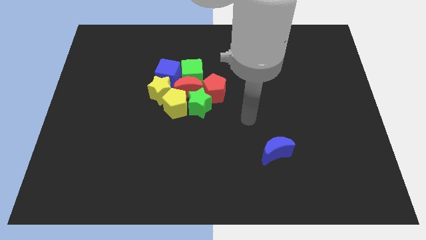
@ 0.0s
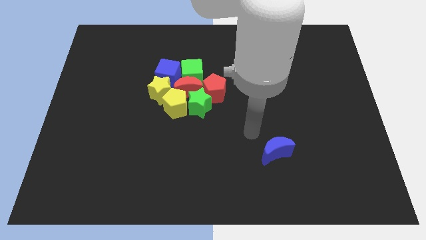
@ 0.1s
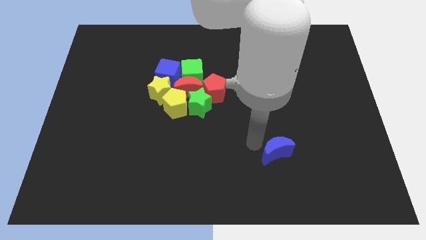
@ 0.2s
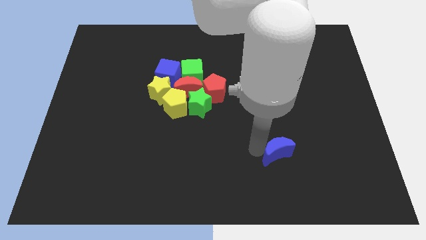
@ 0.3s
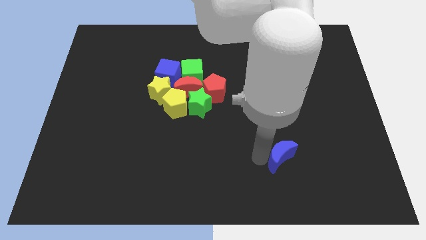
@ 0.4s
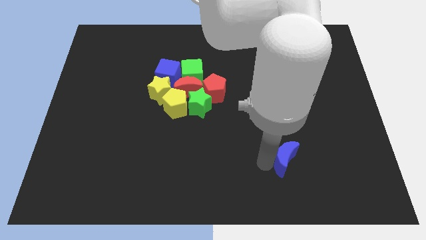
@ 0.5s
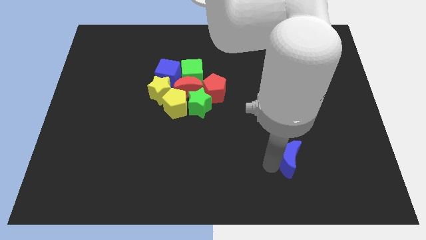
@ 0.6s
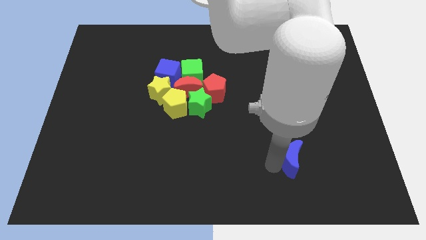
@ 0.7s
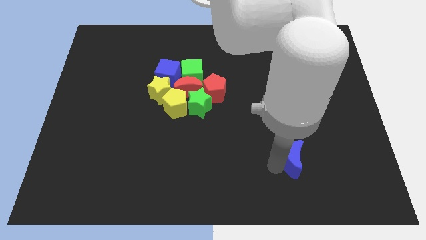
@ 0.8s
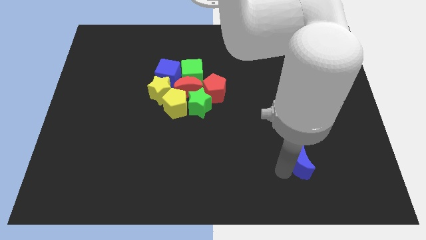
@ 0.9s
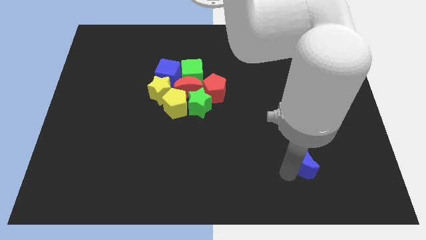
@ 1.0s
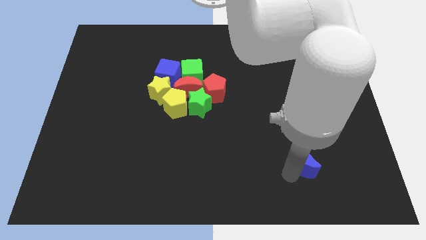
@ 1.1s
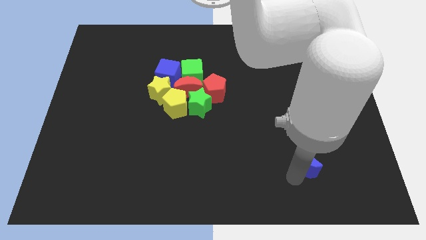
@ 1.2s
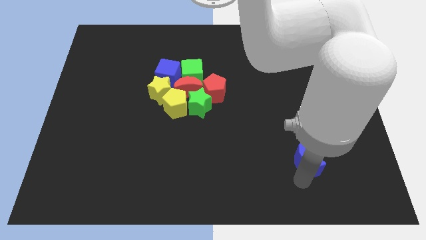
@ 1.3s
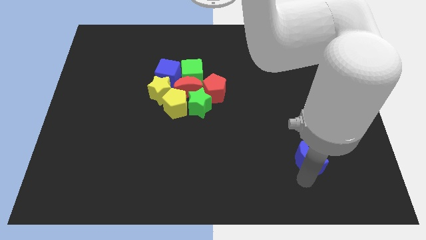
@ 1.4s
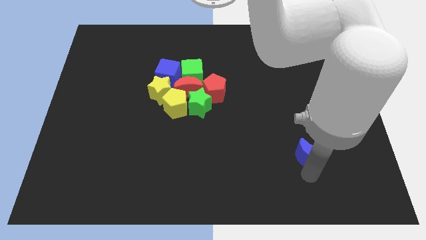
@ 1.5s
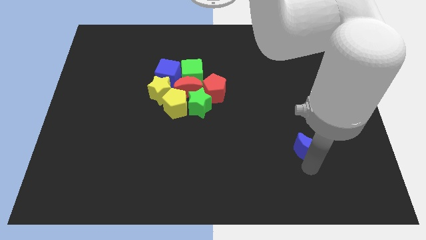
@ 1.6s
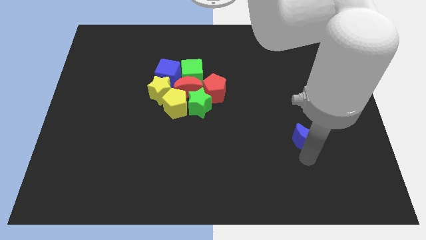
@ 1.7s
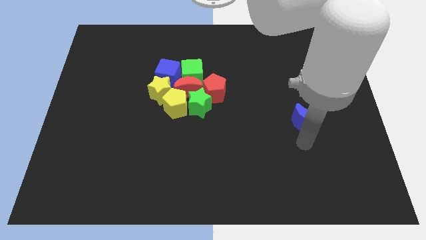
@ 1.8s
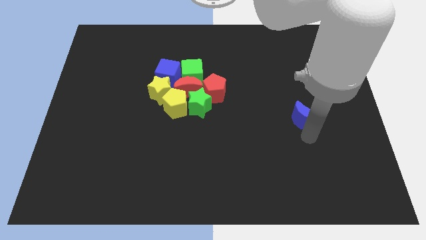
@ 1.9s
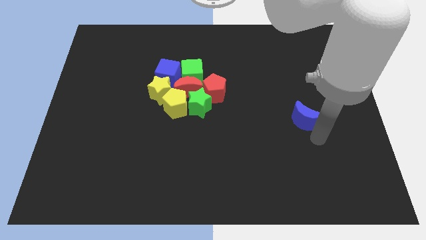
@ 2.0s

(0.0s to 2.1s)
slightly move the blue crescent towards the right center of the board

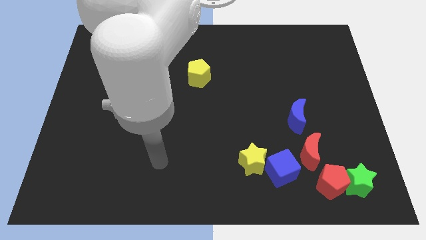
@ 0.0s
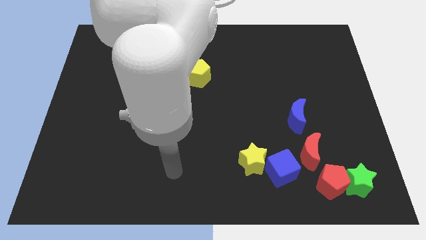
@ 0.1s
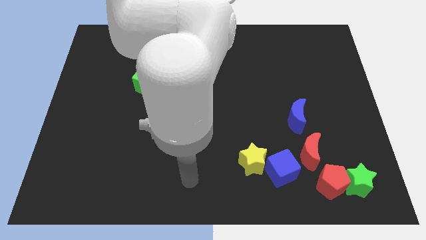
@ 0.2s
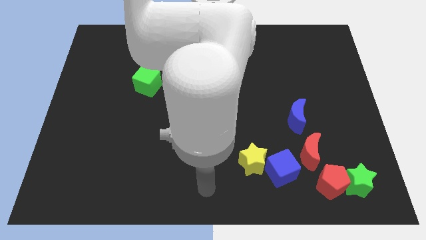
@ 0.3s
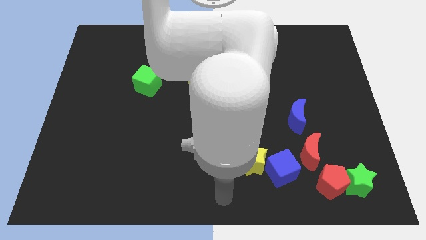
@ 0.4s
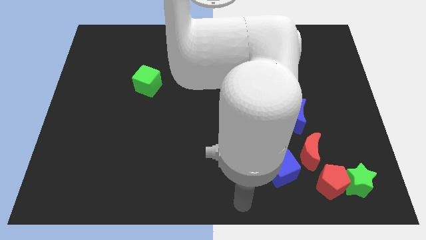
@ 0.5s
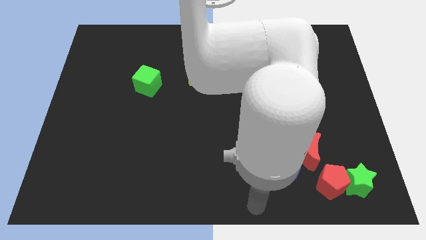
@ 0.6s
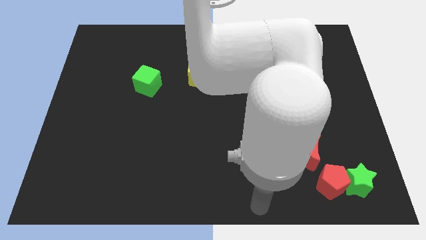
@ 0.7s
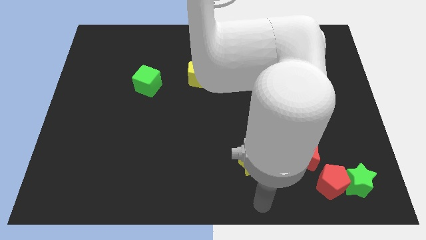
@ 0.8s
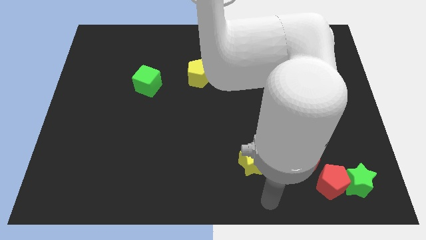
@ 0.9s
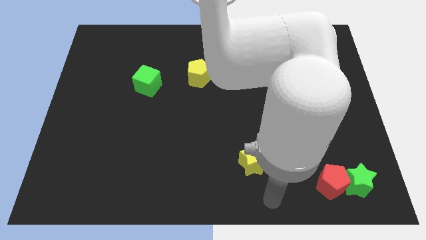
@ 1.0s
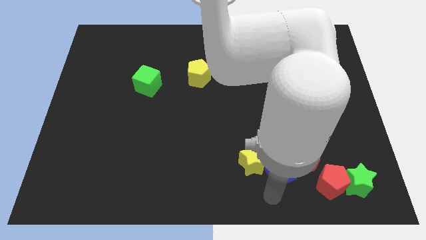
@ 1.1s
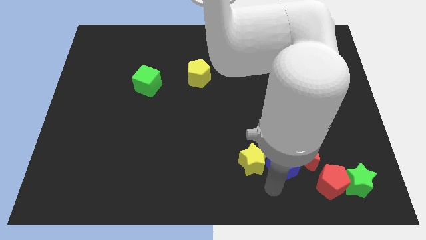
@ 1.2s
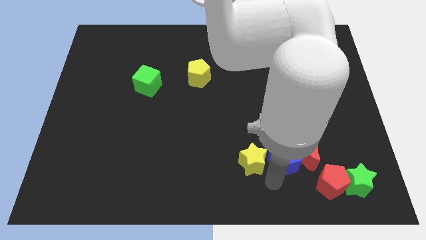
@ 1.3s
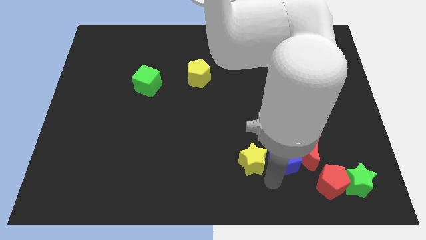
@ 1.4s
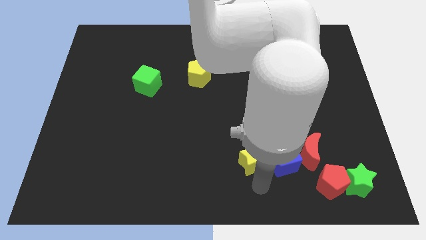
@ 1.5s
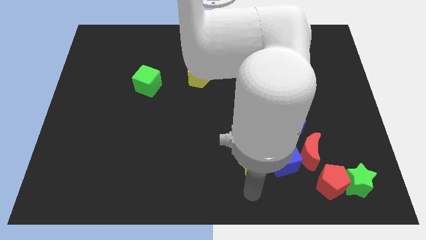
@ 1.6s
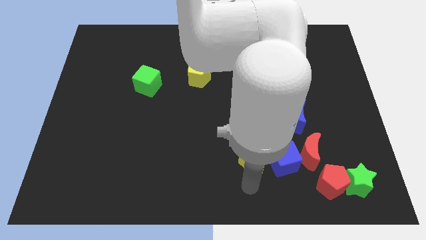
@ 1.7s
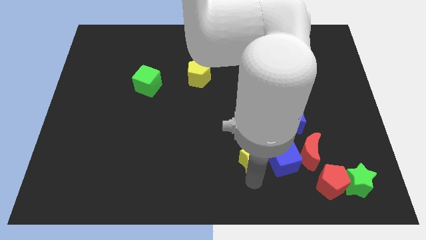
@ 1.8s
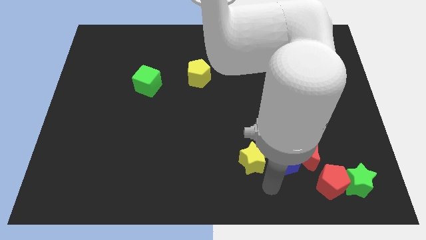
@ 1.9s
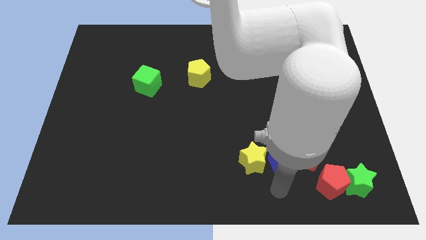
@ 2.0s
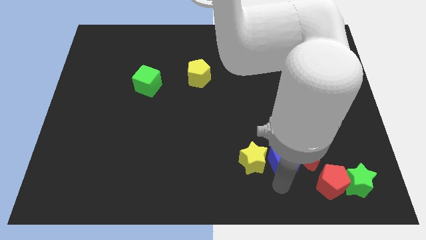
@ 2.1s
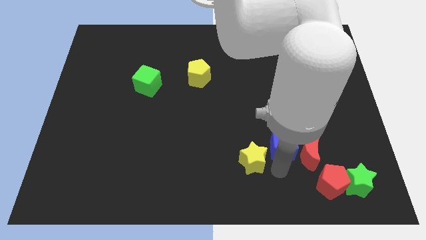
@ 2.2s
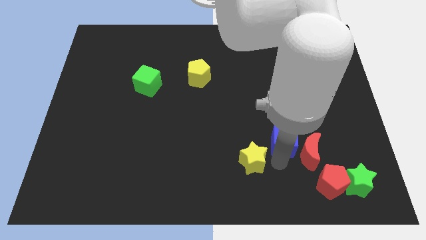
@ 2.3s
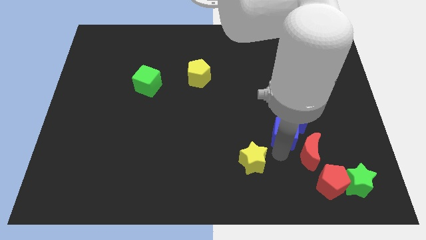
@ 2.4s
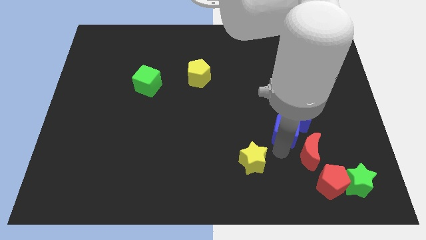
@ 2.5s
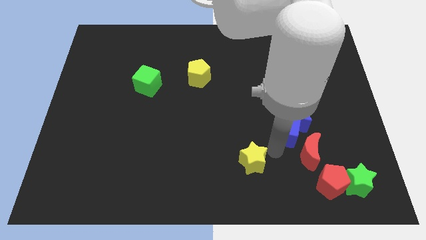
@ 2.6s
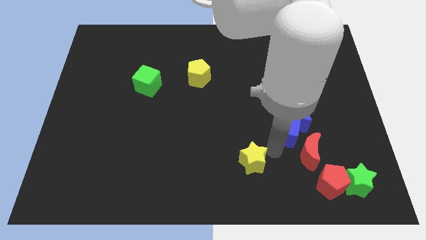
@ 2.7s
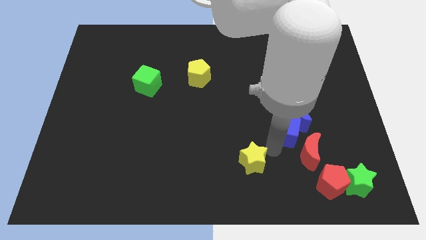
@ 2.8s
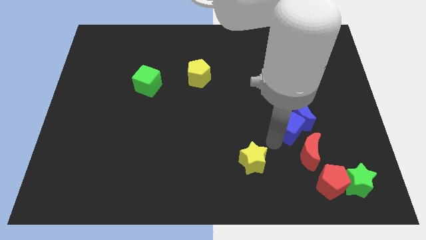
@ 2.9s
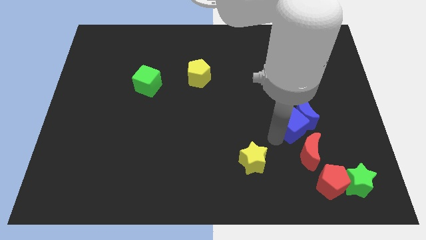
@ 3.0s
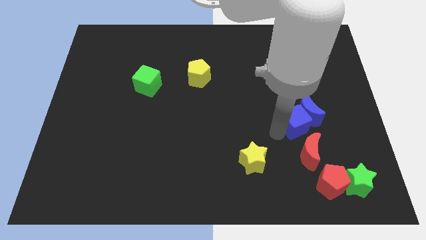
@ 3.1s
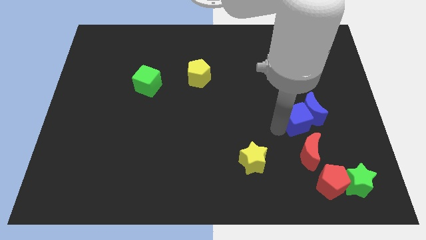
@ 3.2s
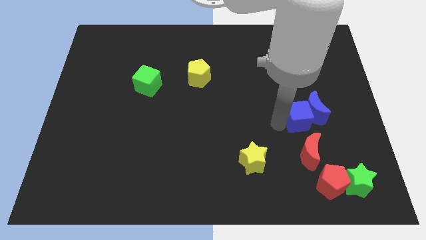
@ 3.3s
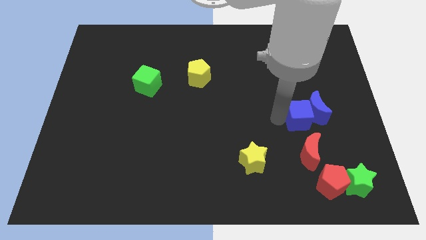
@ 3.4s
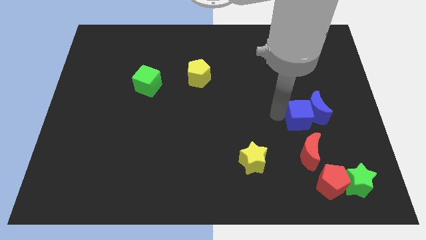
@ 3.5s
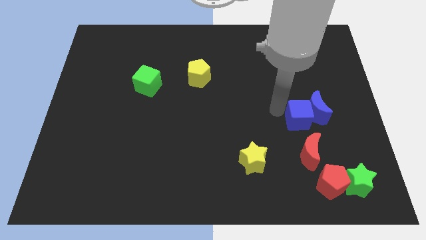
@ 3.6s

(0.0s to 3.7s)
move the blue blocks towards the top of the red moon

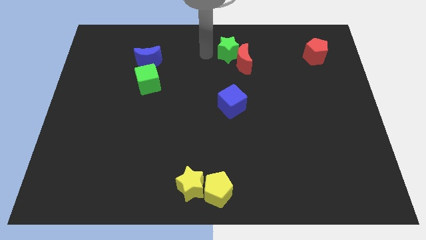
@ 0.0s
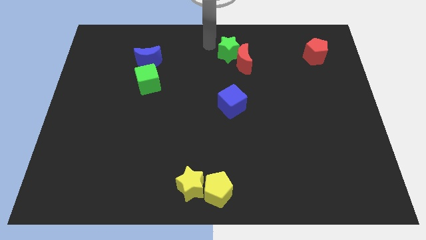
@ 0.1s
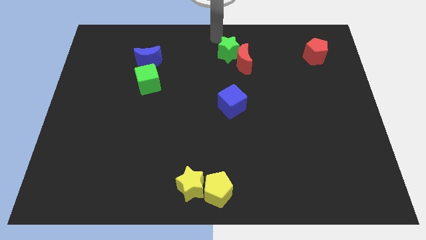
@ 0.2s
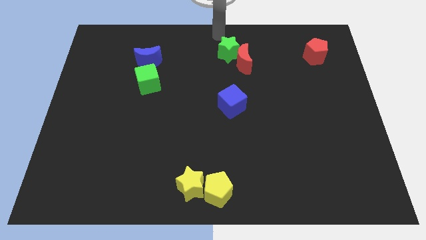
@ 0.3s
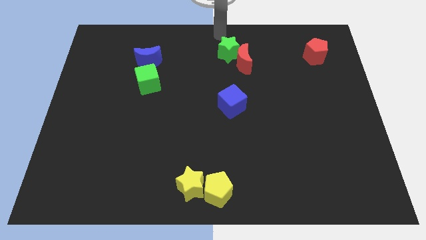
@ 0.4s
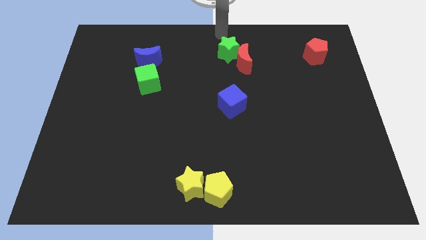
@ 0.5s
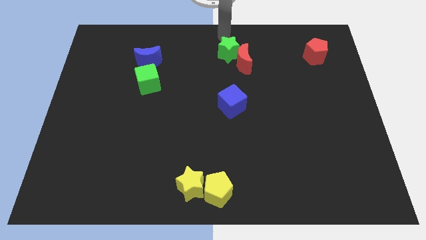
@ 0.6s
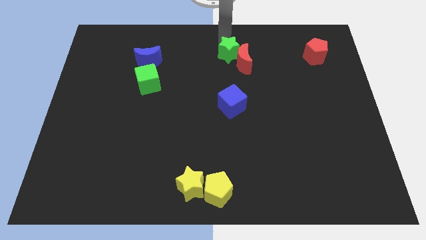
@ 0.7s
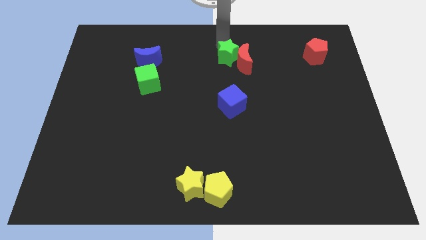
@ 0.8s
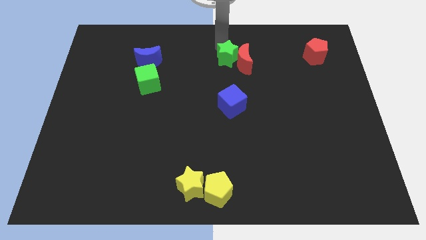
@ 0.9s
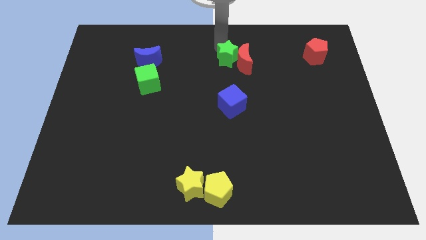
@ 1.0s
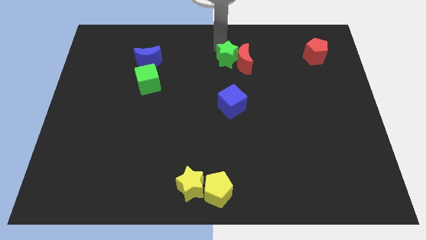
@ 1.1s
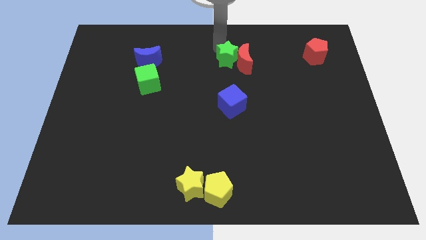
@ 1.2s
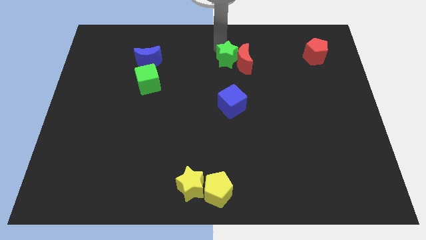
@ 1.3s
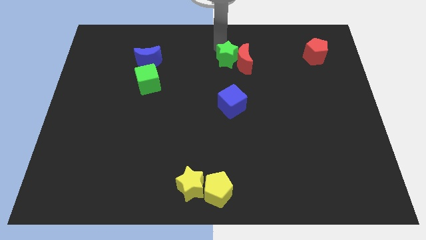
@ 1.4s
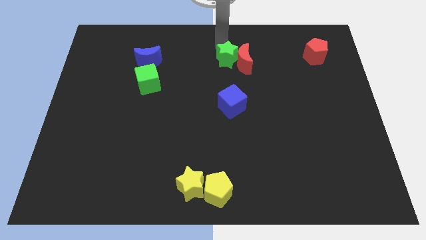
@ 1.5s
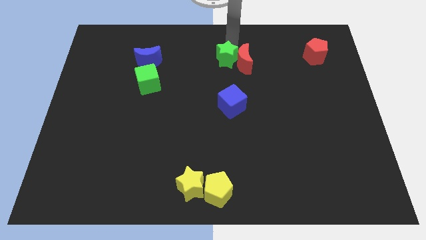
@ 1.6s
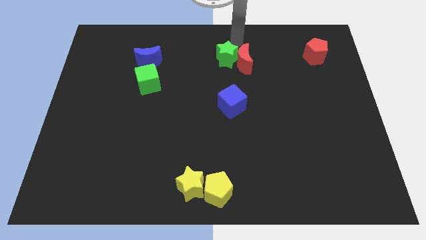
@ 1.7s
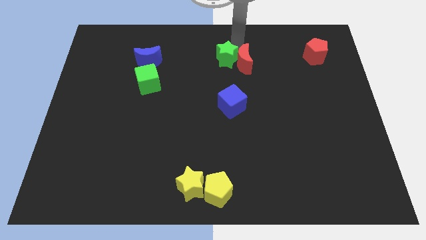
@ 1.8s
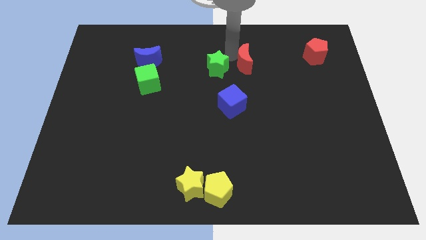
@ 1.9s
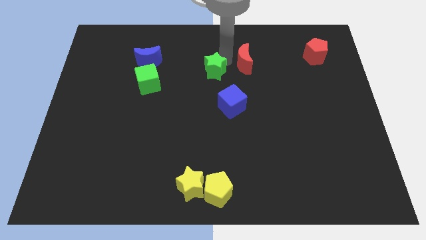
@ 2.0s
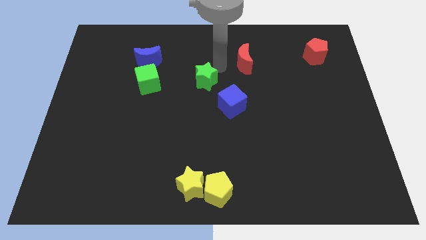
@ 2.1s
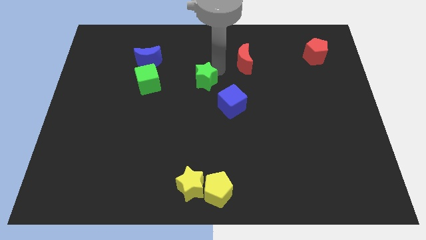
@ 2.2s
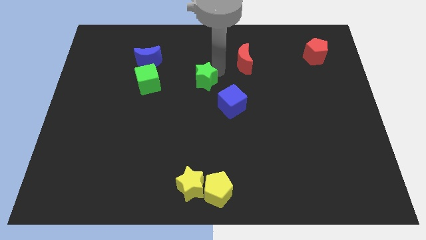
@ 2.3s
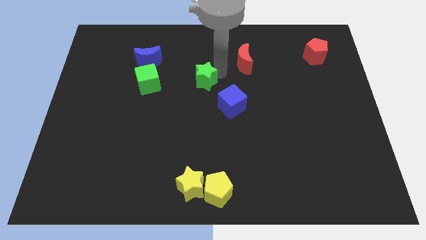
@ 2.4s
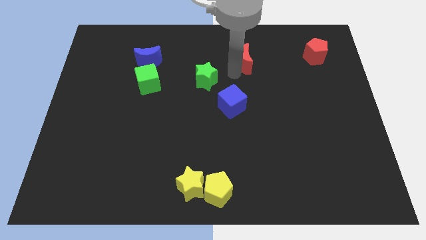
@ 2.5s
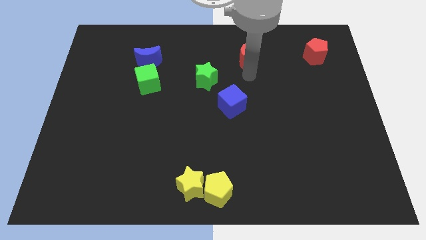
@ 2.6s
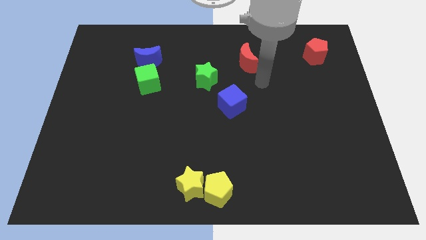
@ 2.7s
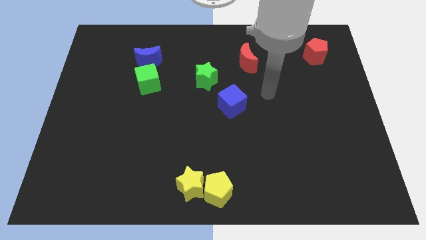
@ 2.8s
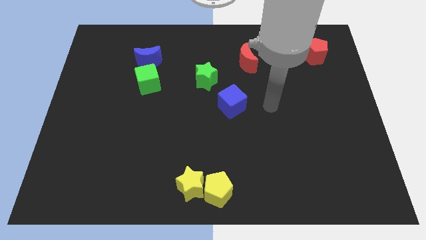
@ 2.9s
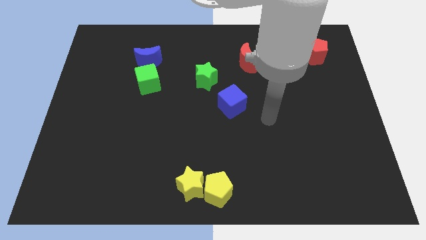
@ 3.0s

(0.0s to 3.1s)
move the green star diagonally left of the red crescent

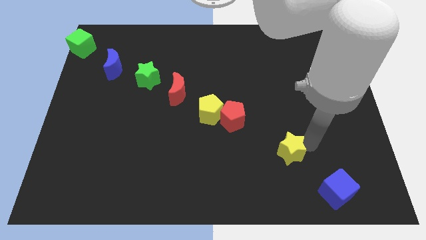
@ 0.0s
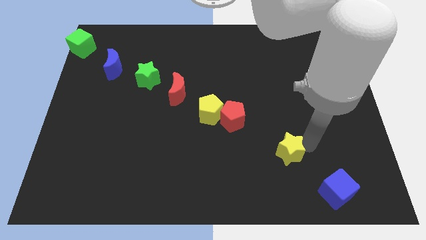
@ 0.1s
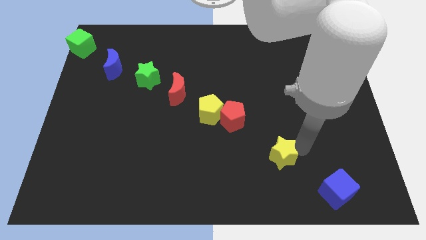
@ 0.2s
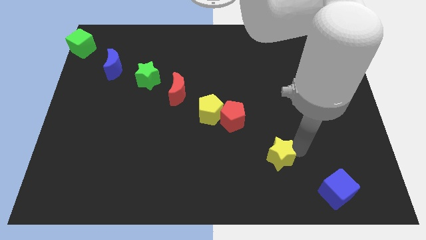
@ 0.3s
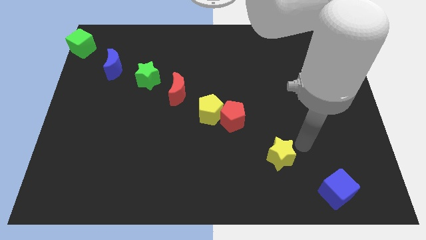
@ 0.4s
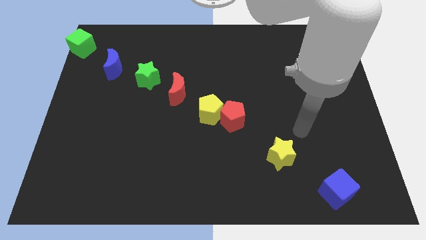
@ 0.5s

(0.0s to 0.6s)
push the yellow start slightly towards left
